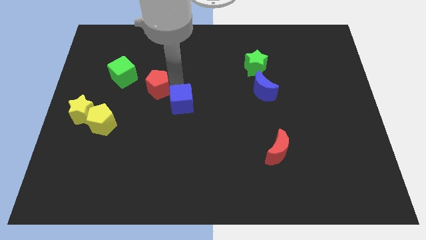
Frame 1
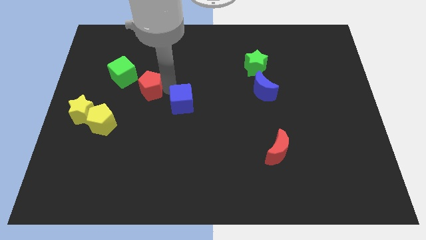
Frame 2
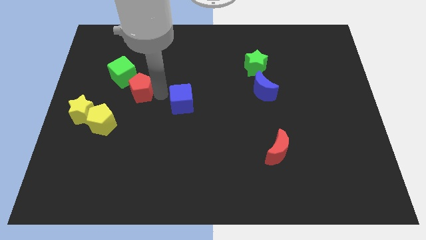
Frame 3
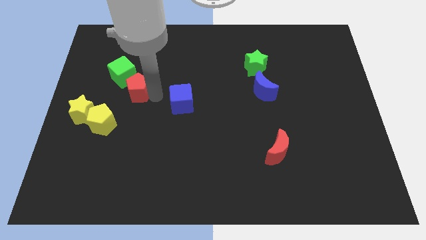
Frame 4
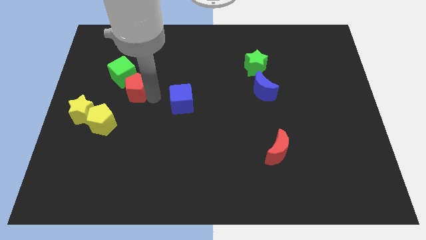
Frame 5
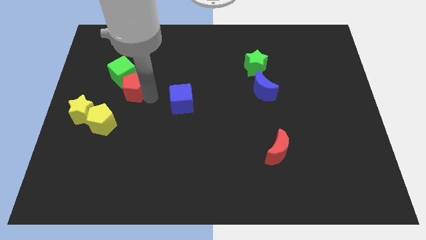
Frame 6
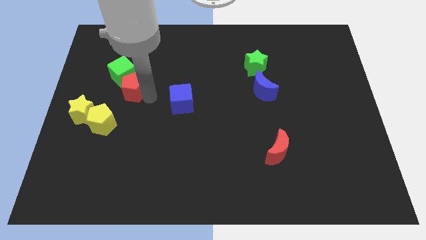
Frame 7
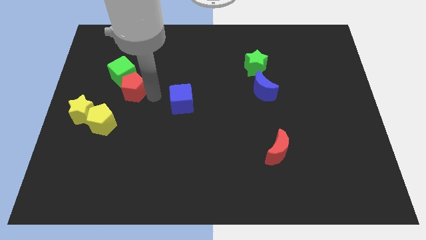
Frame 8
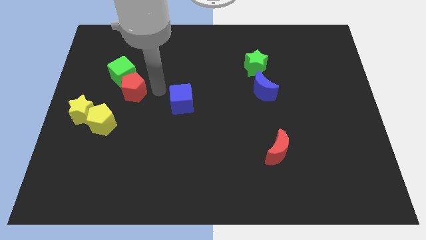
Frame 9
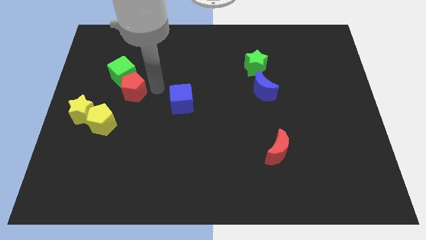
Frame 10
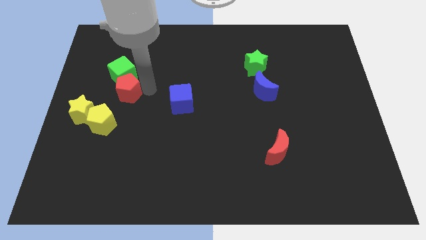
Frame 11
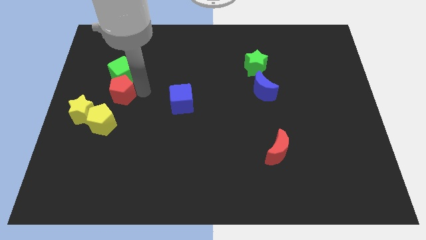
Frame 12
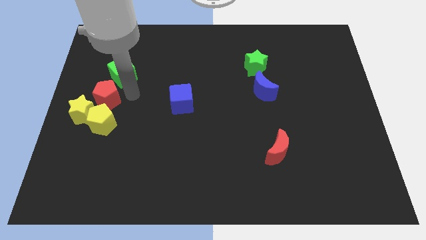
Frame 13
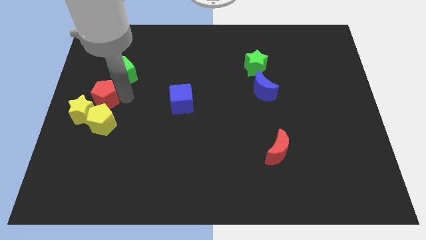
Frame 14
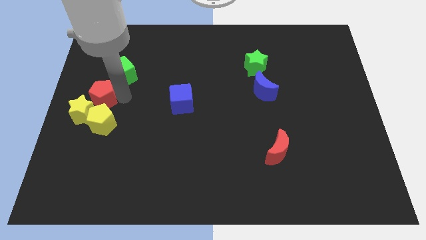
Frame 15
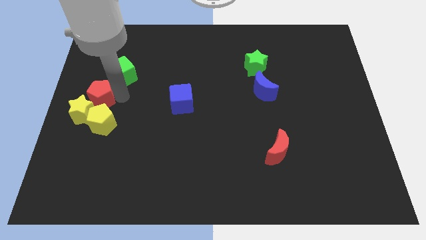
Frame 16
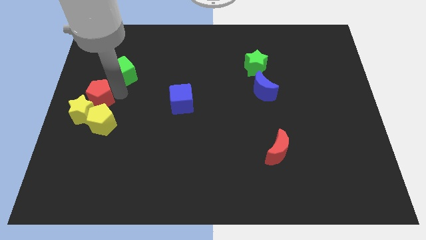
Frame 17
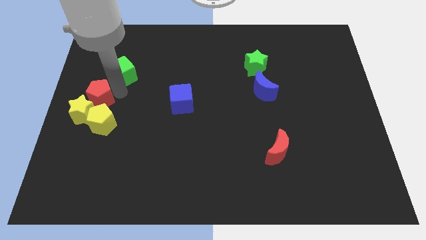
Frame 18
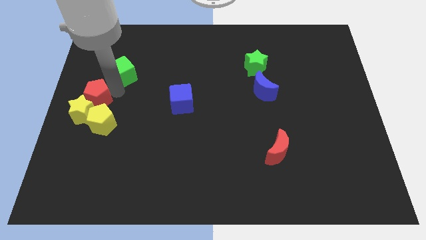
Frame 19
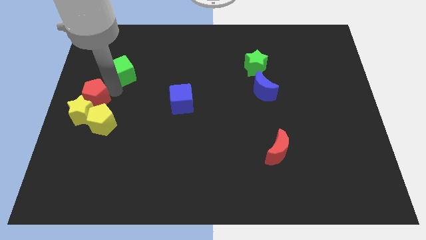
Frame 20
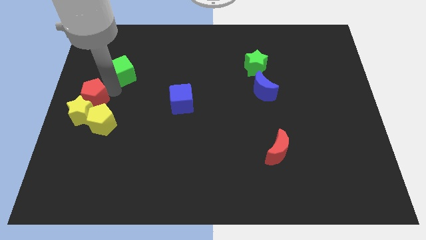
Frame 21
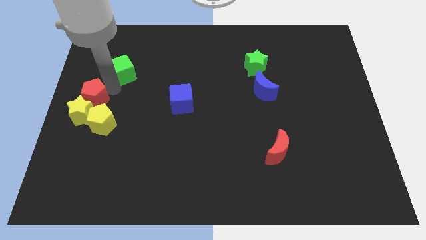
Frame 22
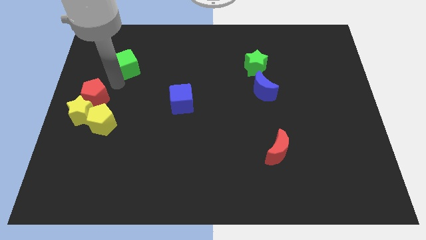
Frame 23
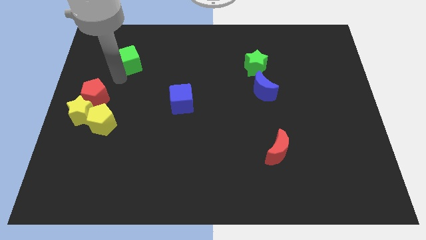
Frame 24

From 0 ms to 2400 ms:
place the red pentagon at the top of yellow star

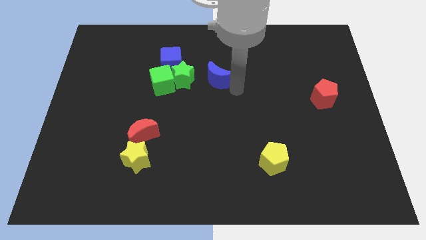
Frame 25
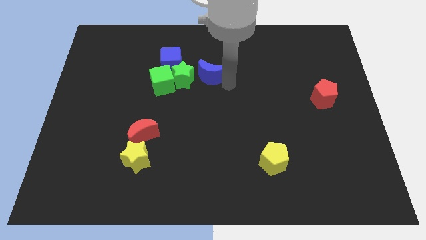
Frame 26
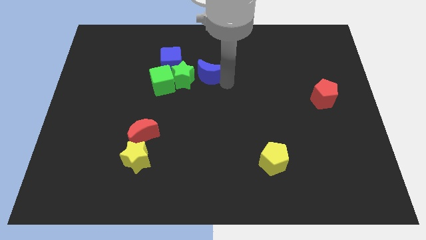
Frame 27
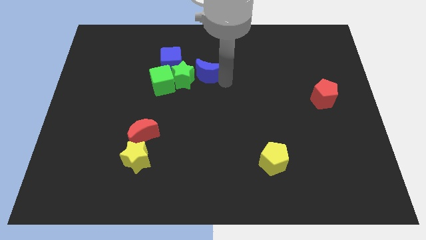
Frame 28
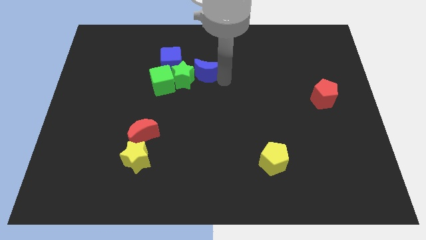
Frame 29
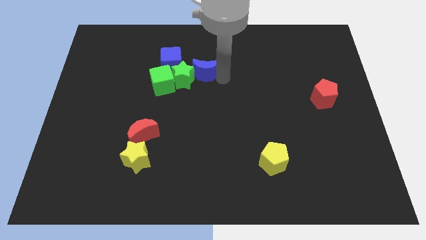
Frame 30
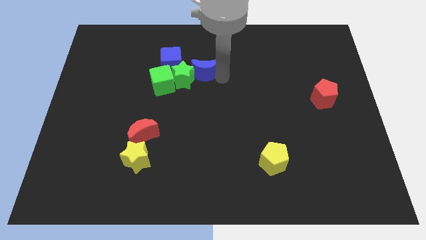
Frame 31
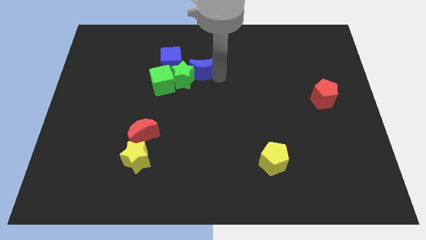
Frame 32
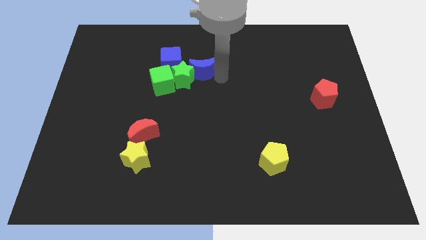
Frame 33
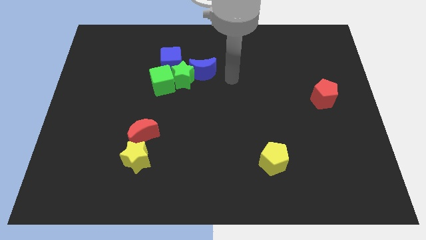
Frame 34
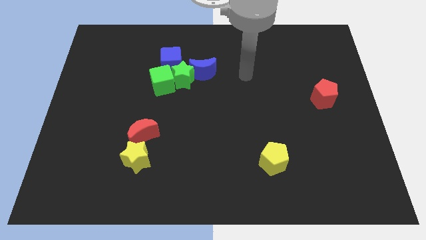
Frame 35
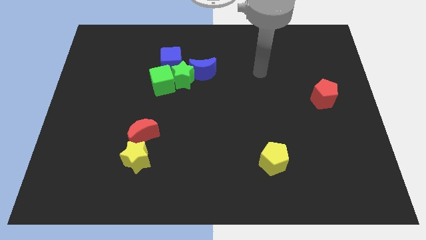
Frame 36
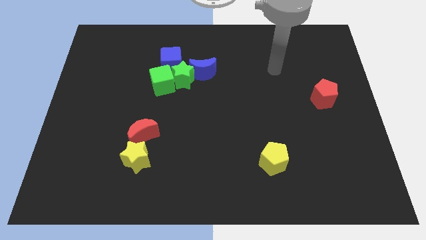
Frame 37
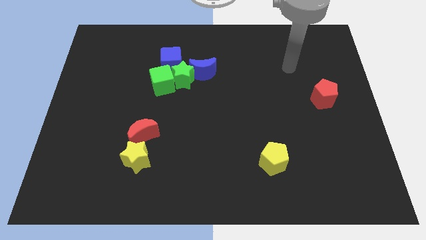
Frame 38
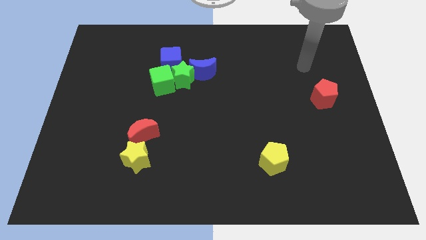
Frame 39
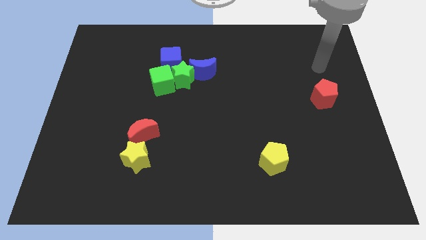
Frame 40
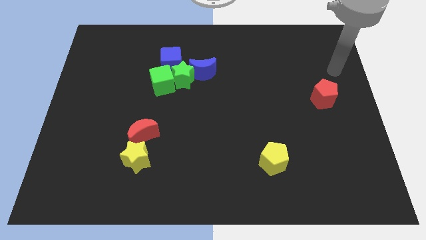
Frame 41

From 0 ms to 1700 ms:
place the blue moon on the top right of the green star

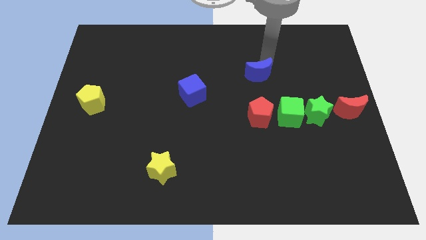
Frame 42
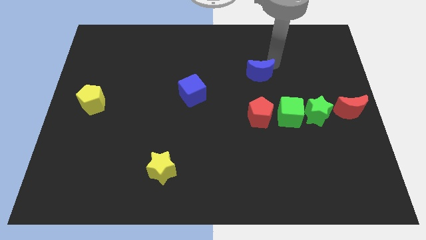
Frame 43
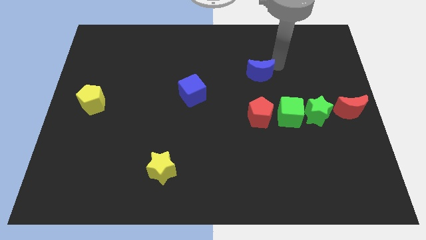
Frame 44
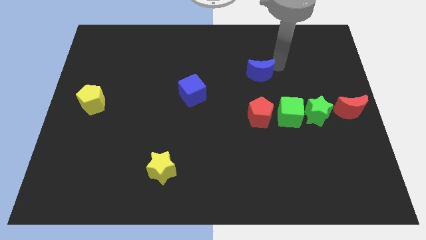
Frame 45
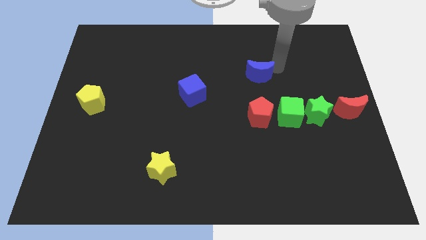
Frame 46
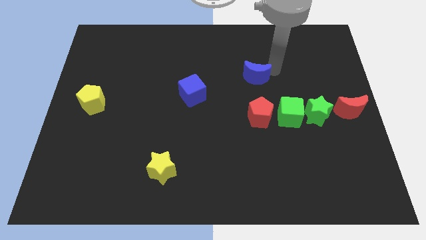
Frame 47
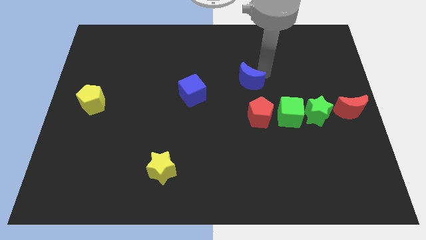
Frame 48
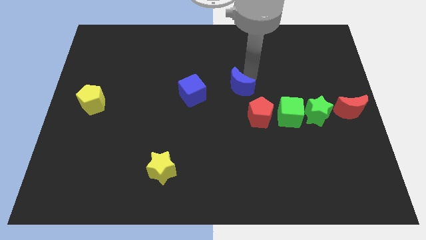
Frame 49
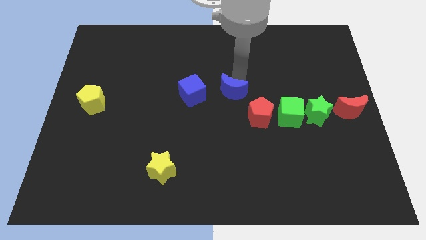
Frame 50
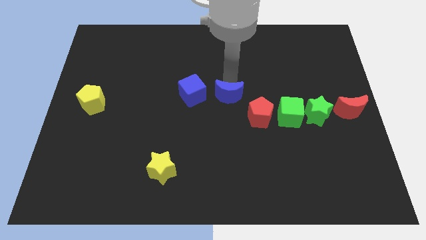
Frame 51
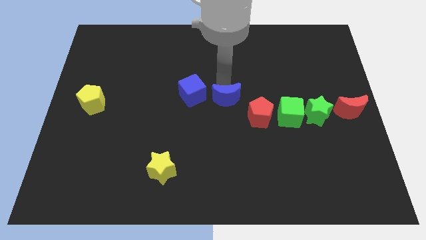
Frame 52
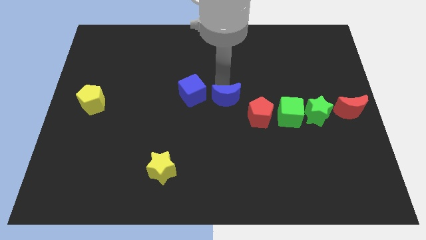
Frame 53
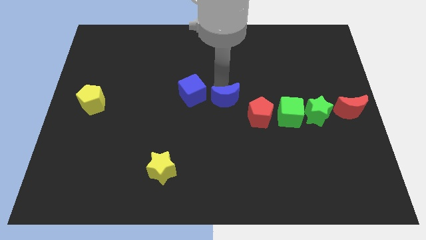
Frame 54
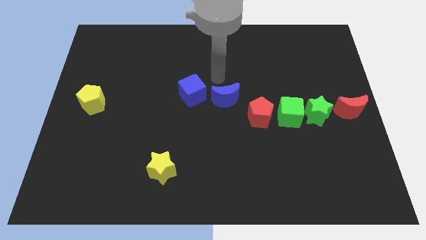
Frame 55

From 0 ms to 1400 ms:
put the blue moon right to the blue cube

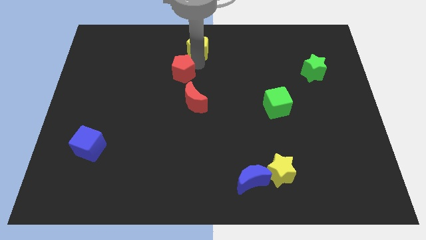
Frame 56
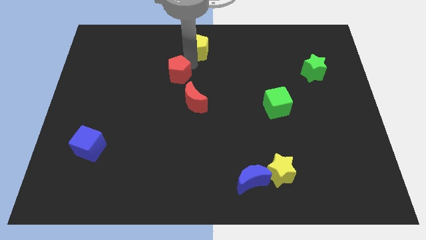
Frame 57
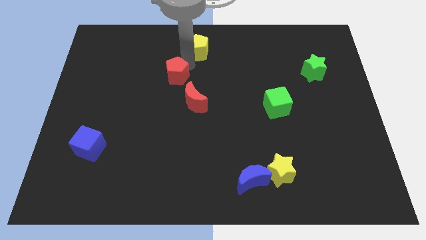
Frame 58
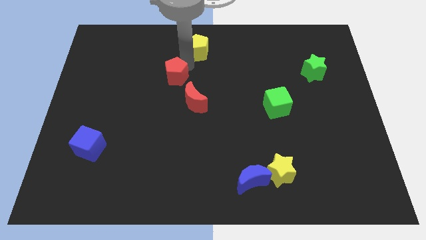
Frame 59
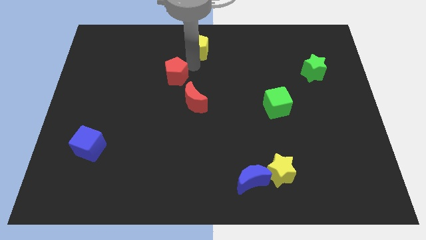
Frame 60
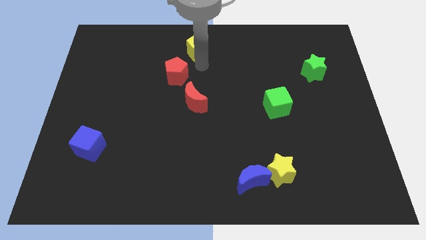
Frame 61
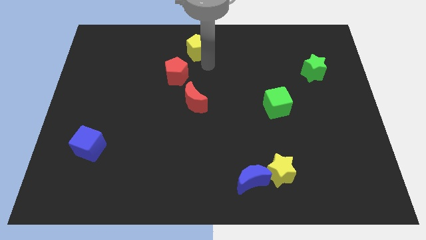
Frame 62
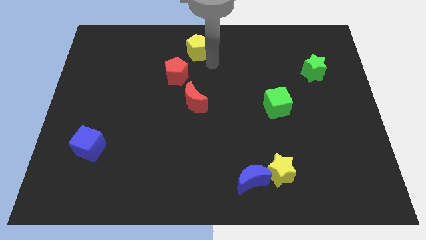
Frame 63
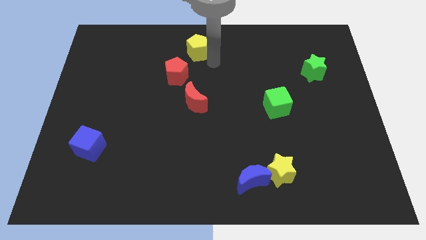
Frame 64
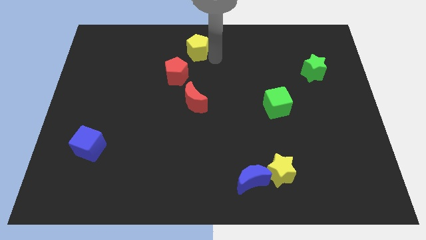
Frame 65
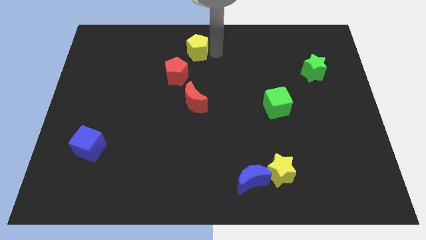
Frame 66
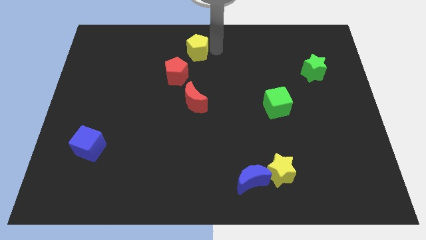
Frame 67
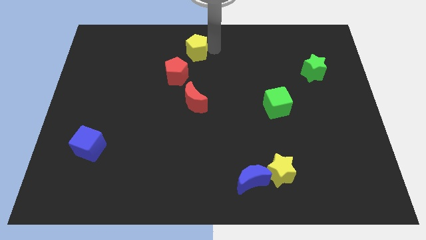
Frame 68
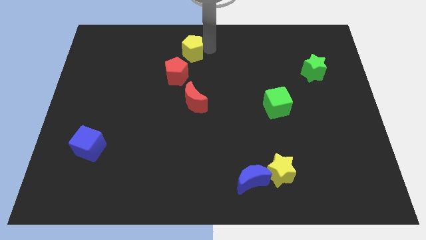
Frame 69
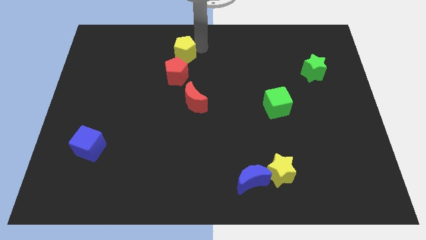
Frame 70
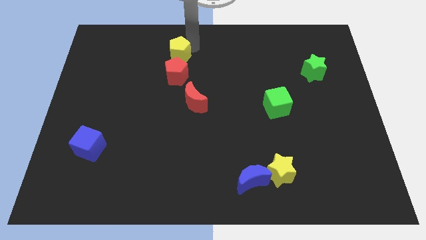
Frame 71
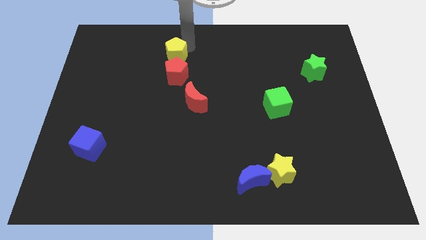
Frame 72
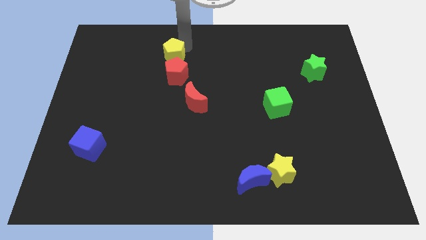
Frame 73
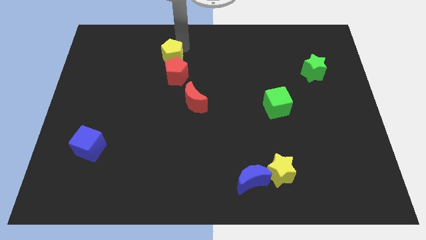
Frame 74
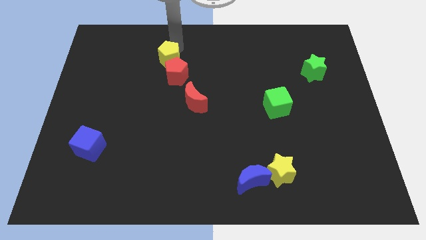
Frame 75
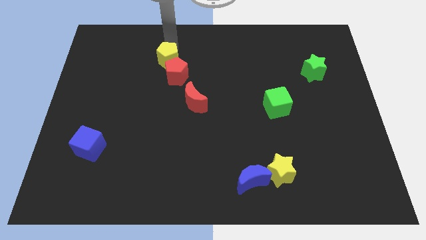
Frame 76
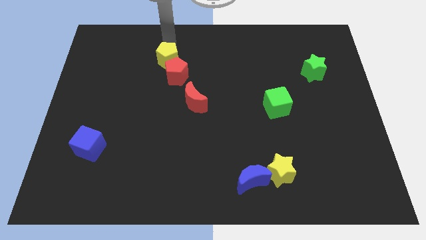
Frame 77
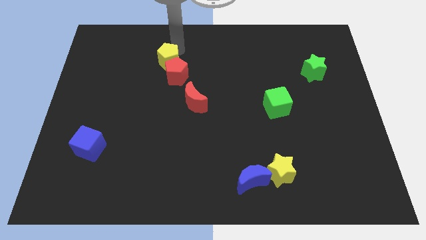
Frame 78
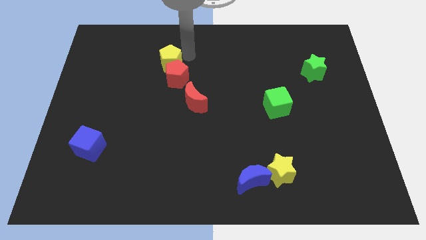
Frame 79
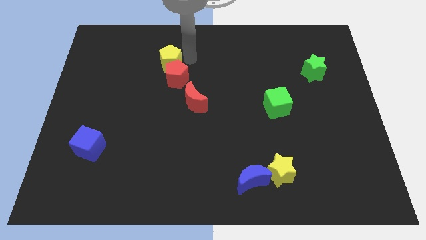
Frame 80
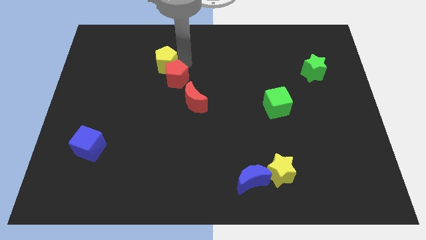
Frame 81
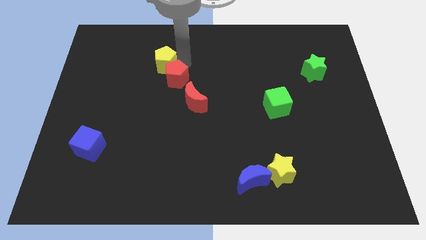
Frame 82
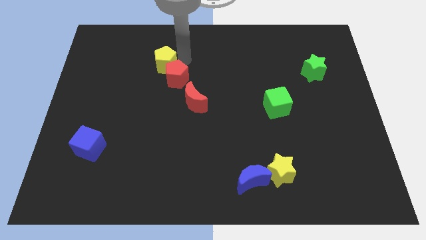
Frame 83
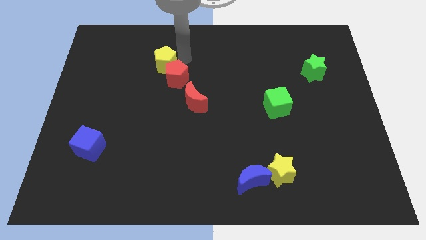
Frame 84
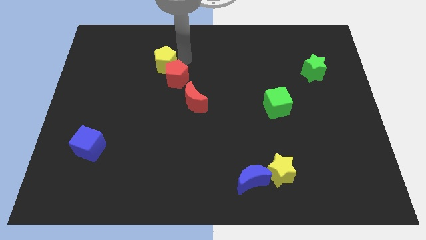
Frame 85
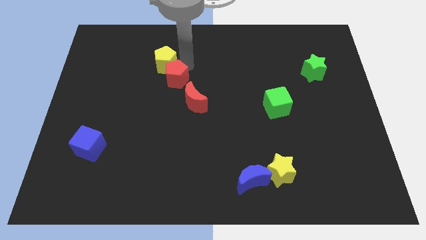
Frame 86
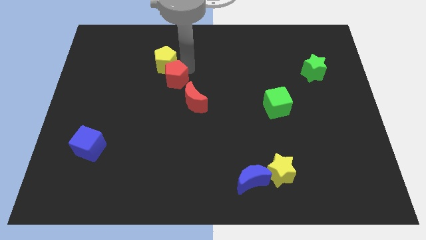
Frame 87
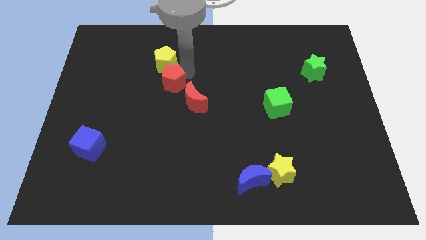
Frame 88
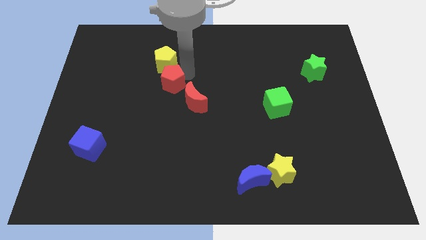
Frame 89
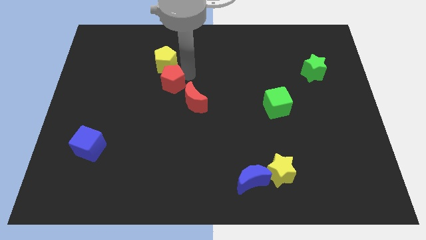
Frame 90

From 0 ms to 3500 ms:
place yellow pentagon to the top right of the red pentagon
